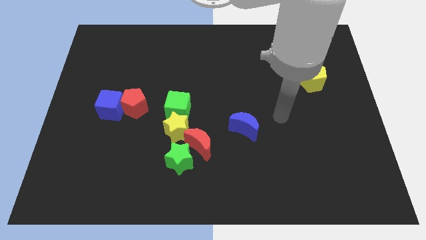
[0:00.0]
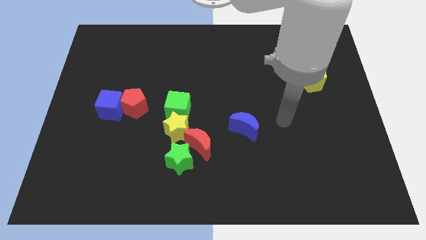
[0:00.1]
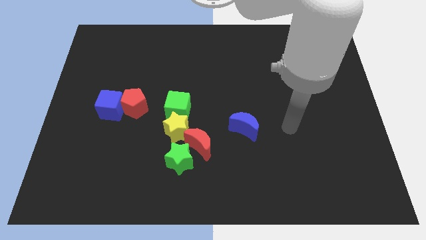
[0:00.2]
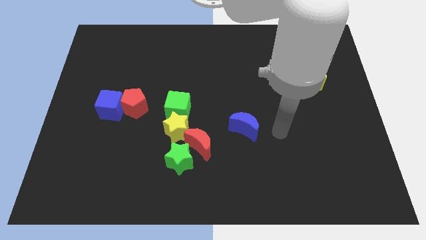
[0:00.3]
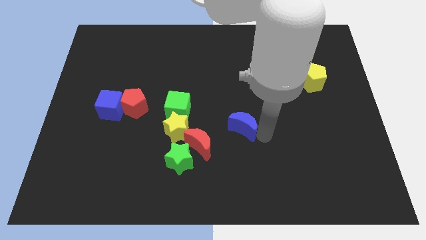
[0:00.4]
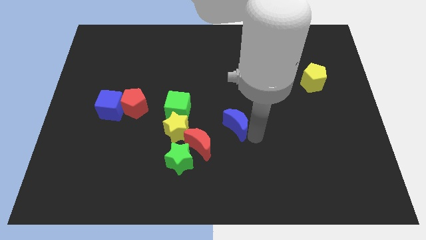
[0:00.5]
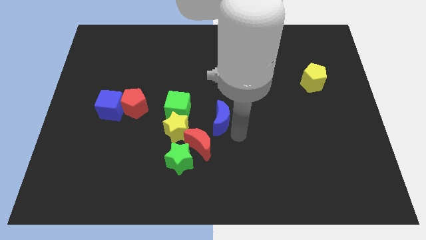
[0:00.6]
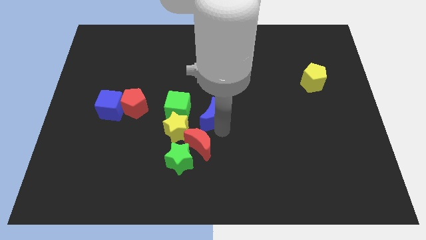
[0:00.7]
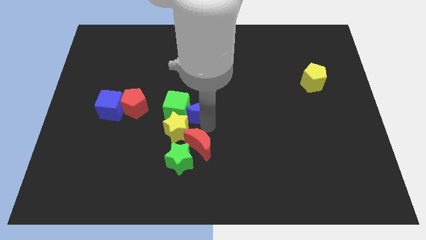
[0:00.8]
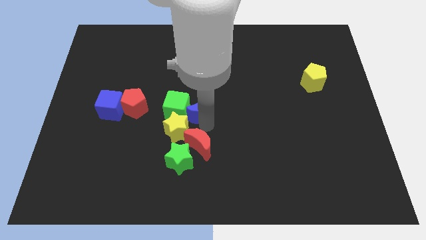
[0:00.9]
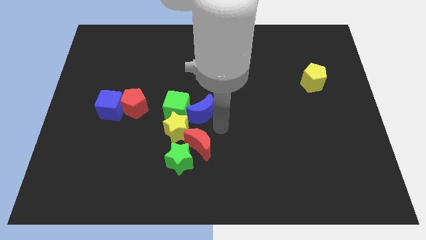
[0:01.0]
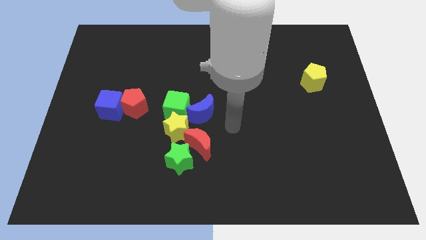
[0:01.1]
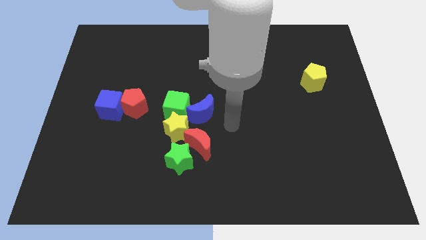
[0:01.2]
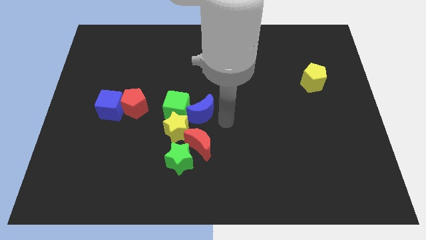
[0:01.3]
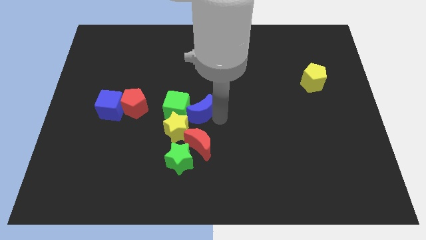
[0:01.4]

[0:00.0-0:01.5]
place the blue crescent at the top side of the red crescent

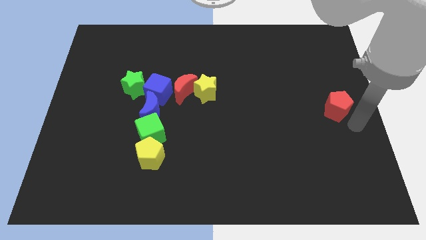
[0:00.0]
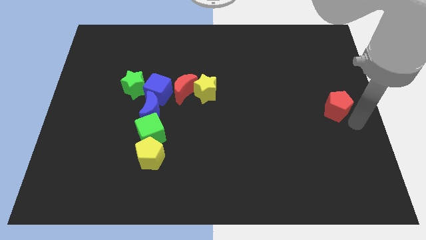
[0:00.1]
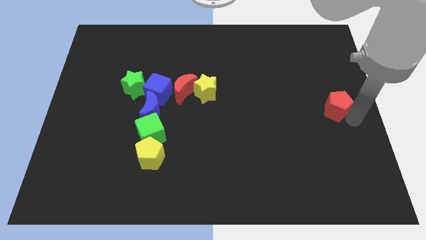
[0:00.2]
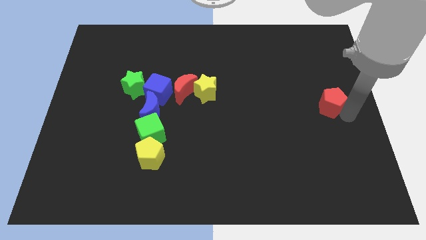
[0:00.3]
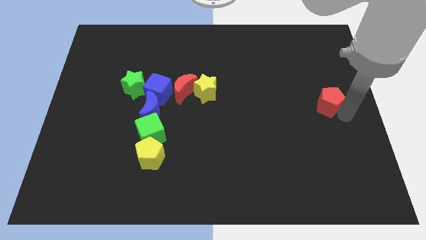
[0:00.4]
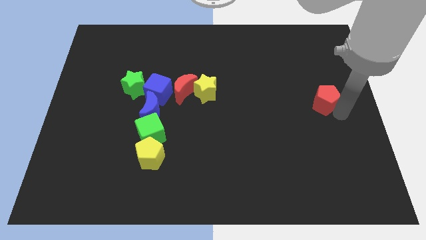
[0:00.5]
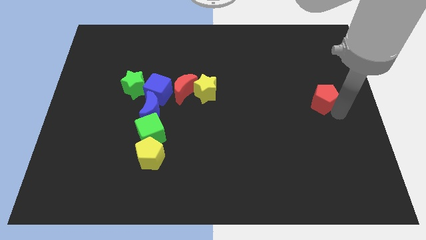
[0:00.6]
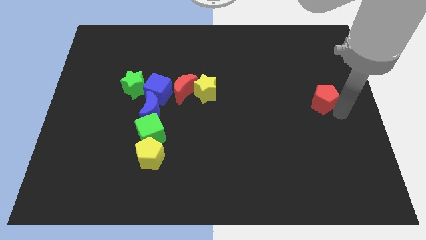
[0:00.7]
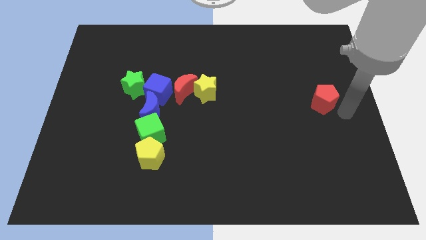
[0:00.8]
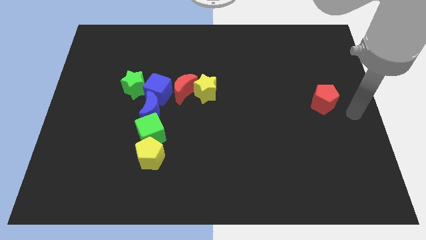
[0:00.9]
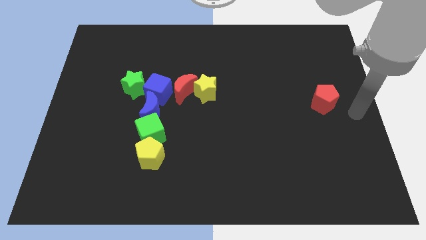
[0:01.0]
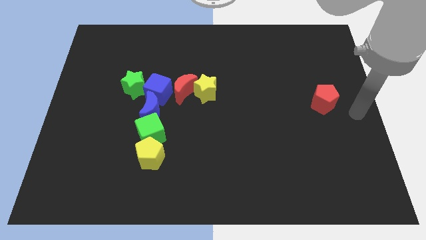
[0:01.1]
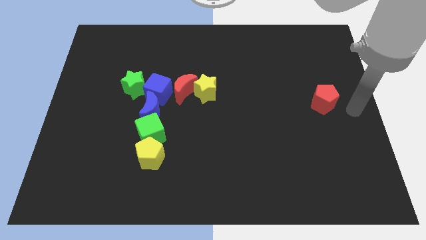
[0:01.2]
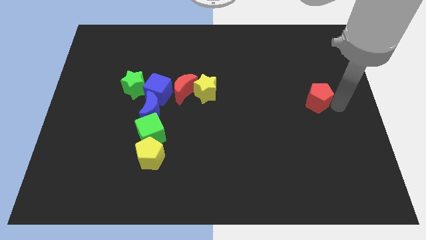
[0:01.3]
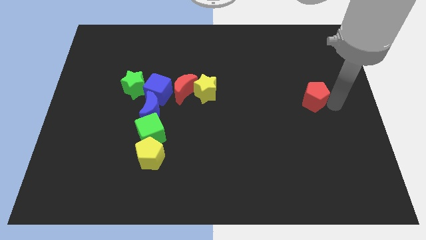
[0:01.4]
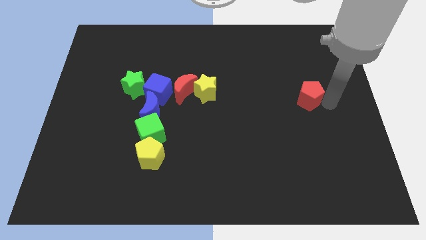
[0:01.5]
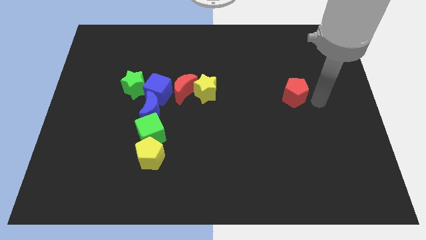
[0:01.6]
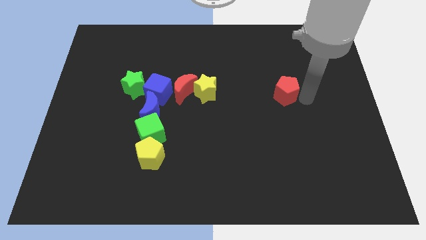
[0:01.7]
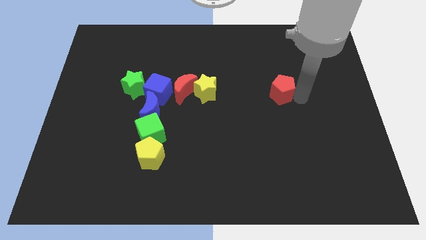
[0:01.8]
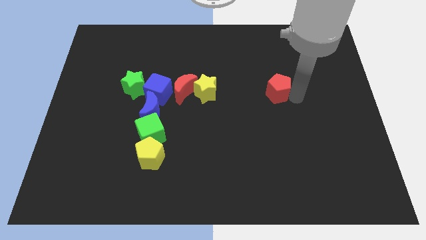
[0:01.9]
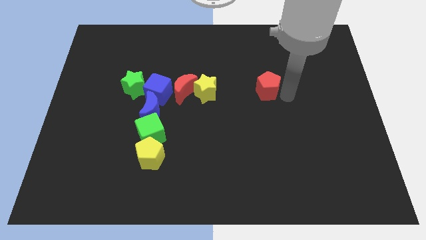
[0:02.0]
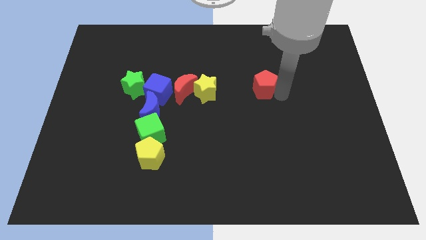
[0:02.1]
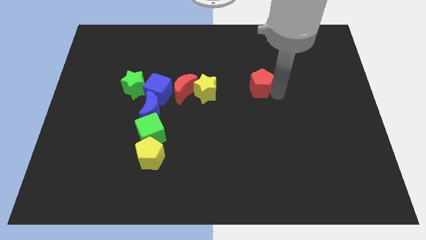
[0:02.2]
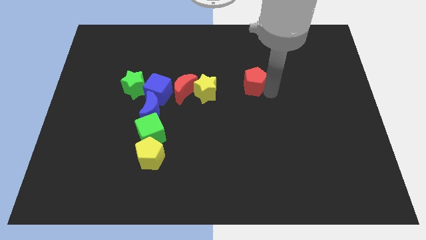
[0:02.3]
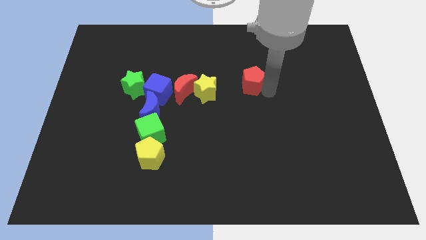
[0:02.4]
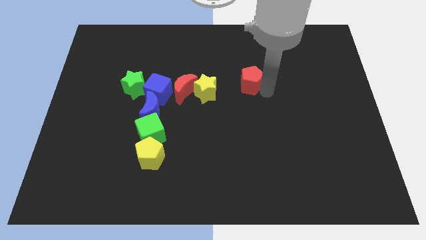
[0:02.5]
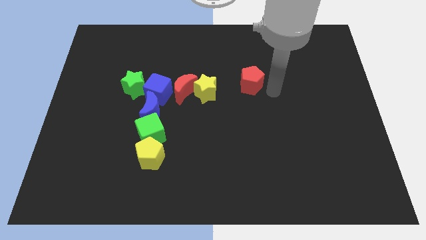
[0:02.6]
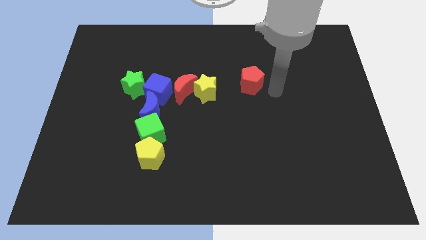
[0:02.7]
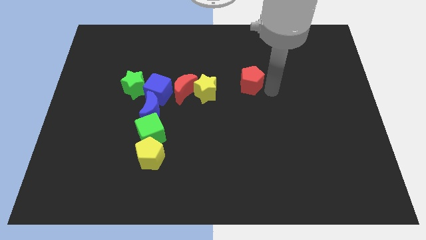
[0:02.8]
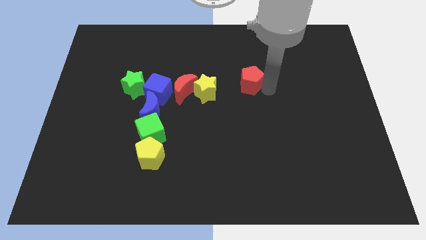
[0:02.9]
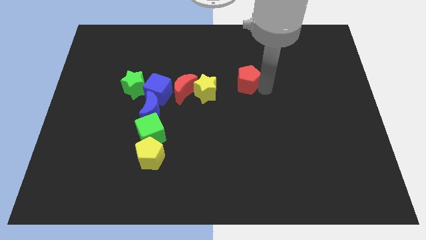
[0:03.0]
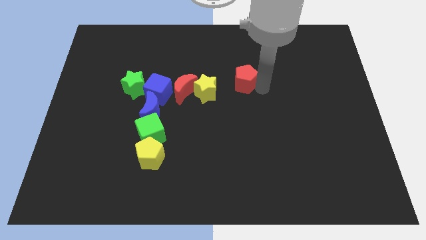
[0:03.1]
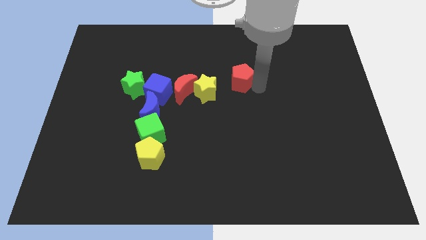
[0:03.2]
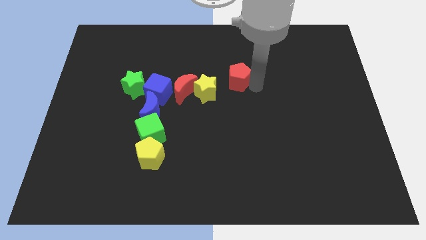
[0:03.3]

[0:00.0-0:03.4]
move red pentagon towards the top side of the yellow star

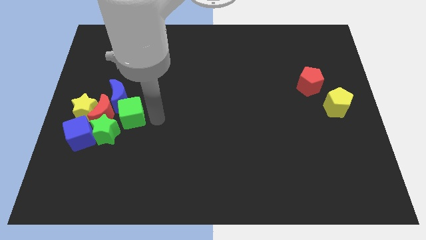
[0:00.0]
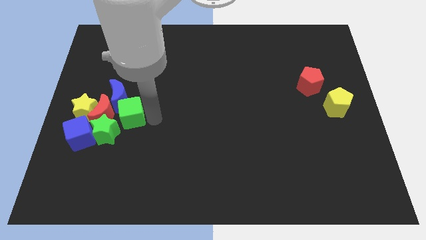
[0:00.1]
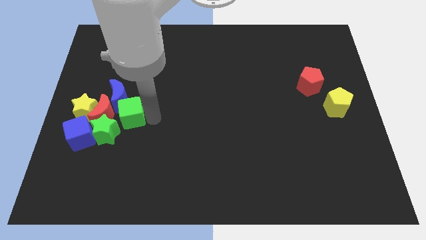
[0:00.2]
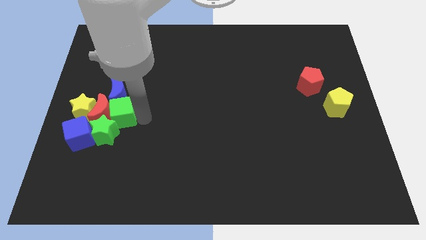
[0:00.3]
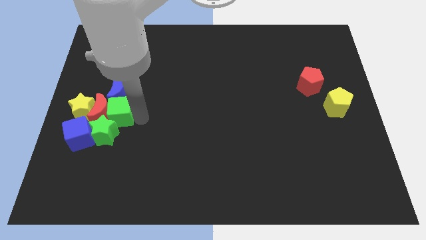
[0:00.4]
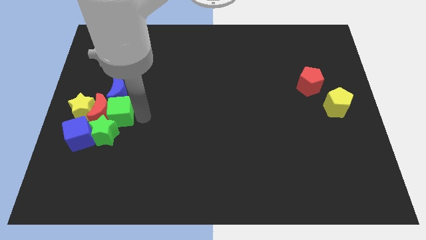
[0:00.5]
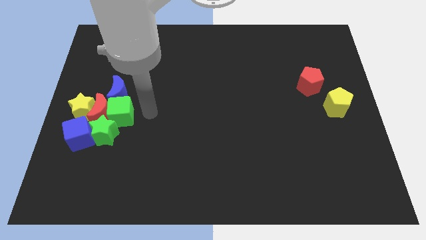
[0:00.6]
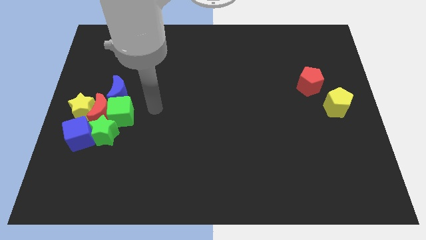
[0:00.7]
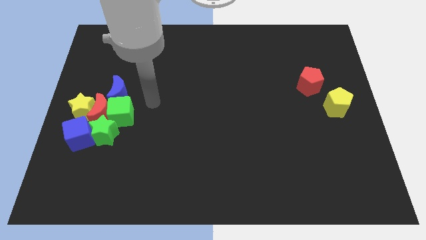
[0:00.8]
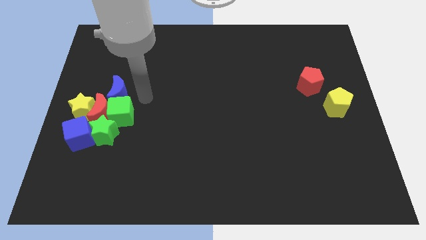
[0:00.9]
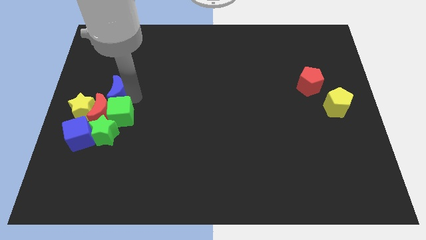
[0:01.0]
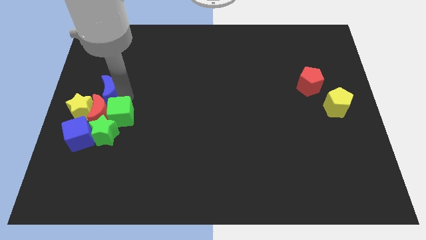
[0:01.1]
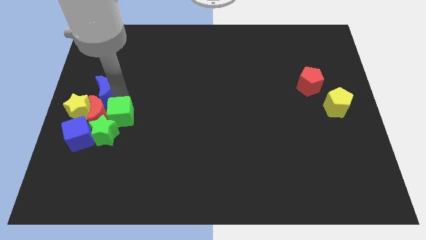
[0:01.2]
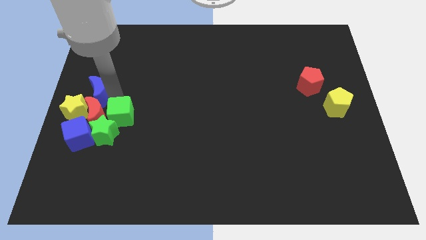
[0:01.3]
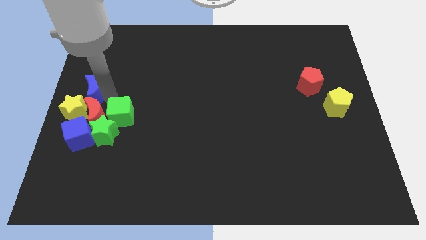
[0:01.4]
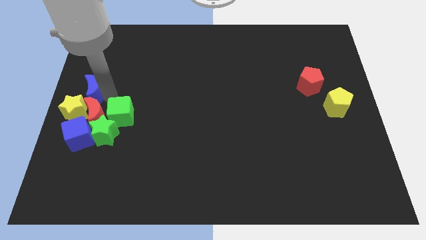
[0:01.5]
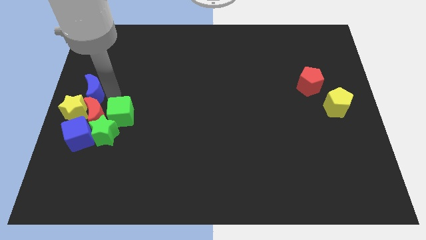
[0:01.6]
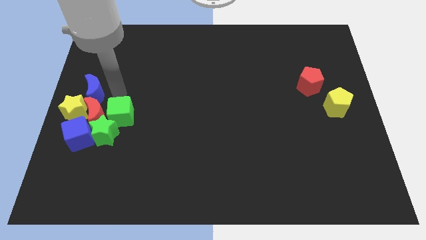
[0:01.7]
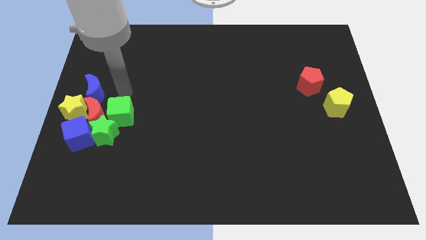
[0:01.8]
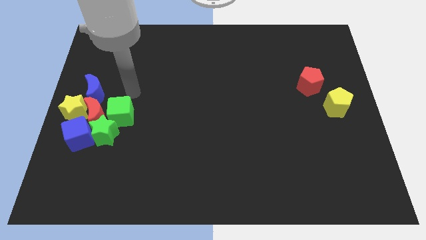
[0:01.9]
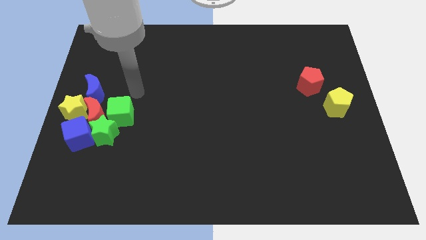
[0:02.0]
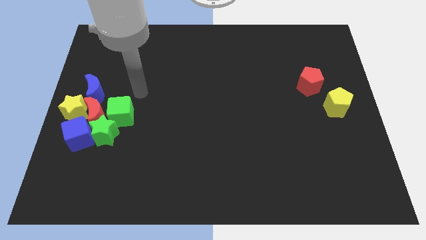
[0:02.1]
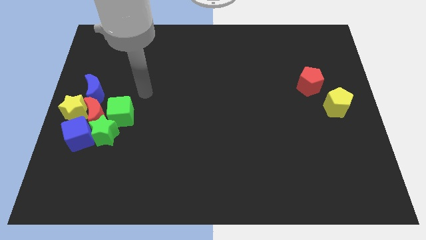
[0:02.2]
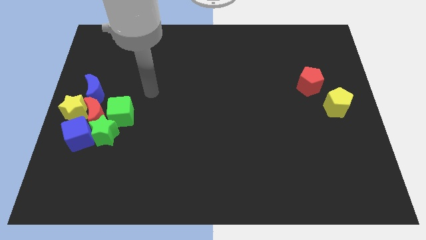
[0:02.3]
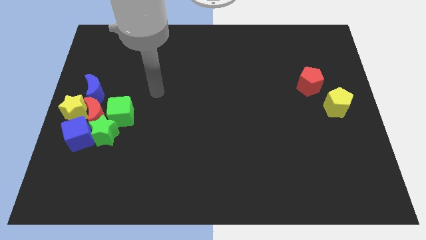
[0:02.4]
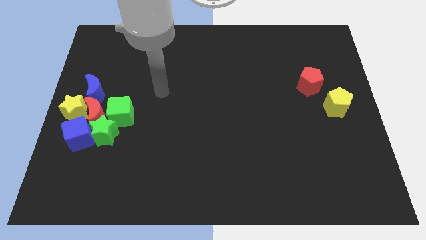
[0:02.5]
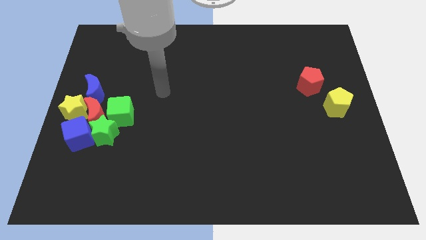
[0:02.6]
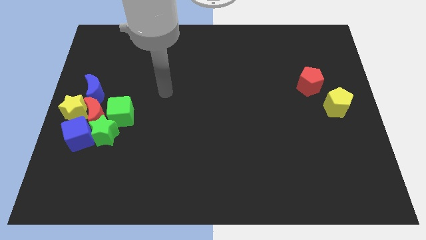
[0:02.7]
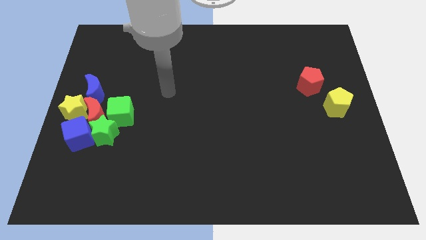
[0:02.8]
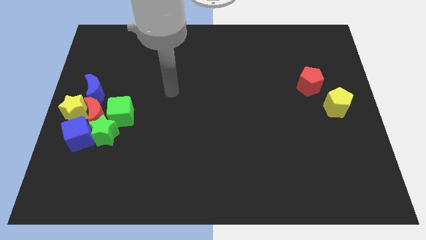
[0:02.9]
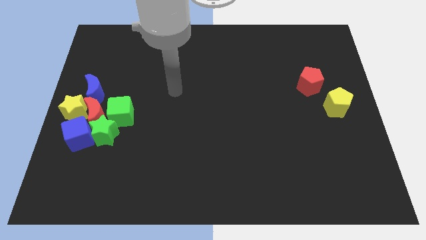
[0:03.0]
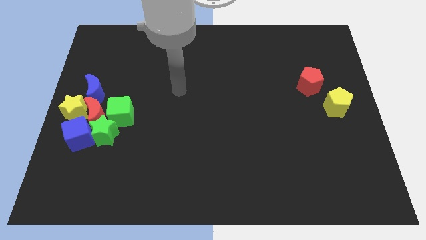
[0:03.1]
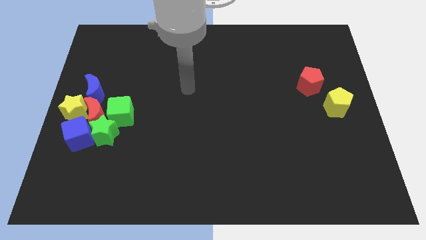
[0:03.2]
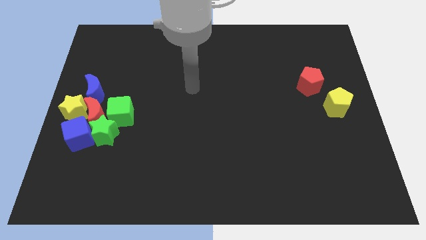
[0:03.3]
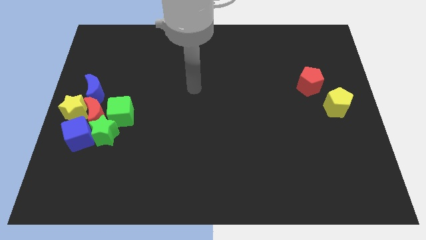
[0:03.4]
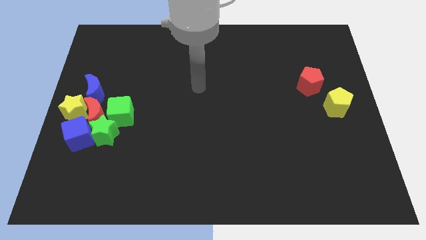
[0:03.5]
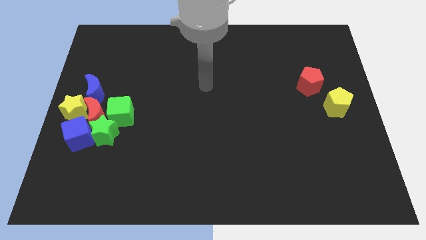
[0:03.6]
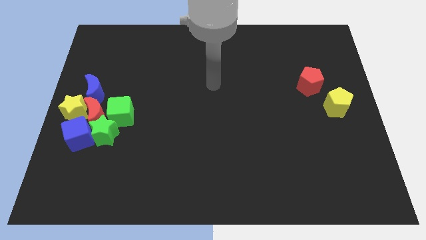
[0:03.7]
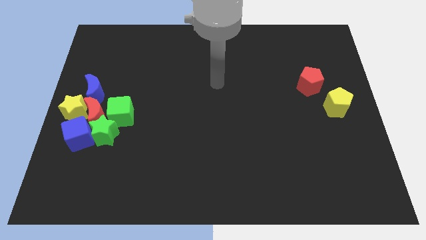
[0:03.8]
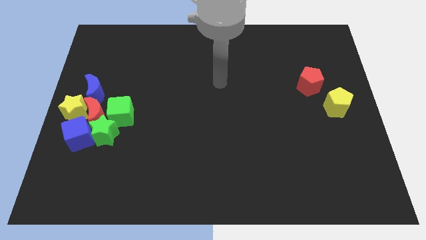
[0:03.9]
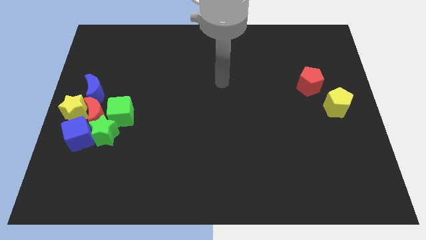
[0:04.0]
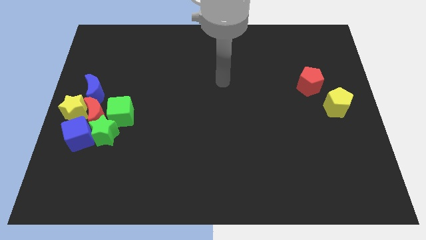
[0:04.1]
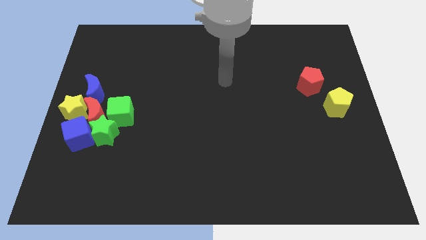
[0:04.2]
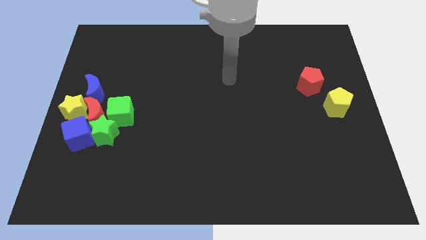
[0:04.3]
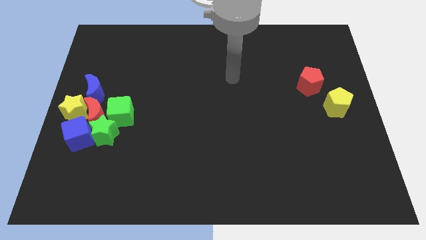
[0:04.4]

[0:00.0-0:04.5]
push the blue crescent on the top of red crescent
